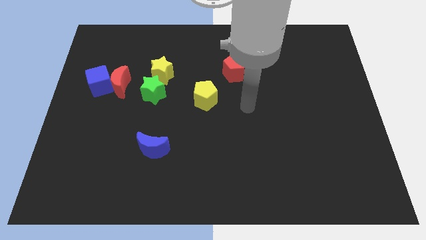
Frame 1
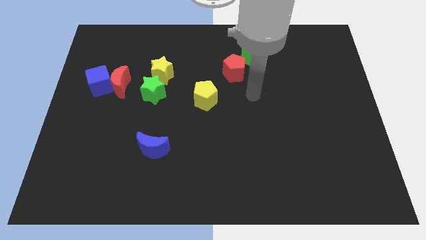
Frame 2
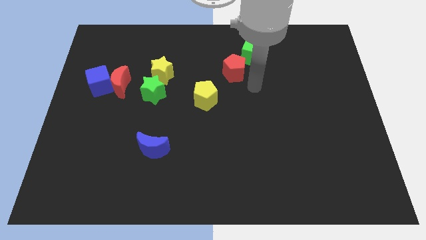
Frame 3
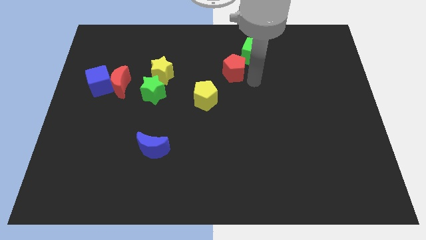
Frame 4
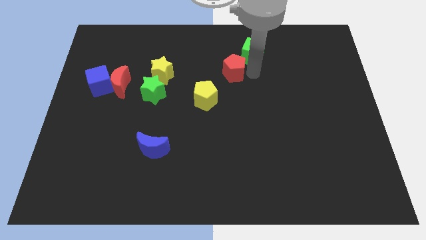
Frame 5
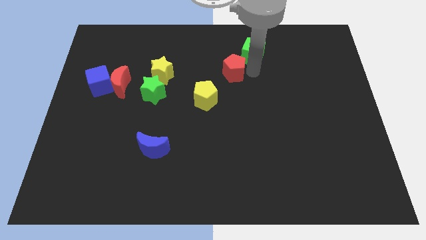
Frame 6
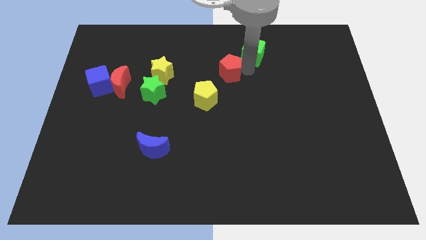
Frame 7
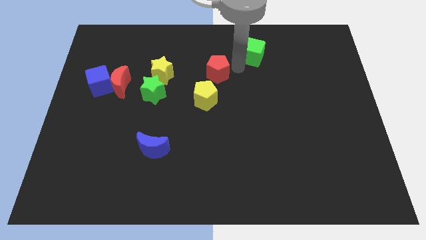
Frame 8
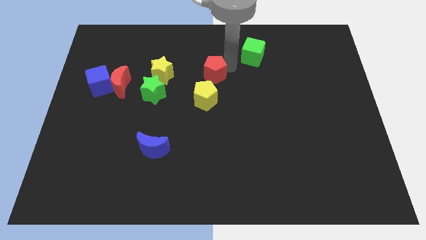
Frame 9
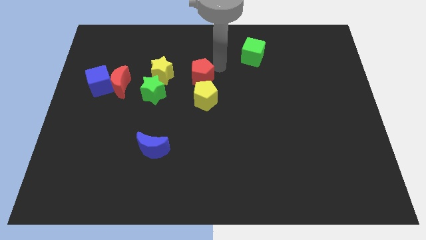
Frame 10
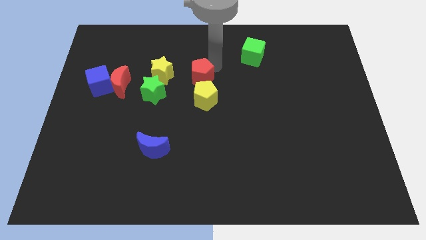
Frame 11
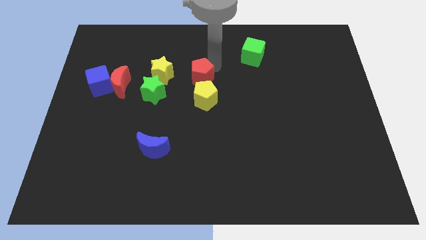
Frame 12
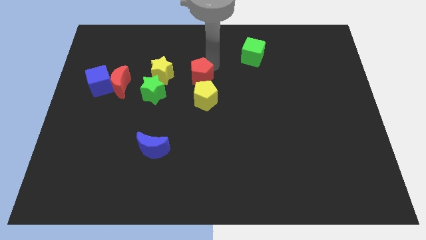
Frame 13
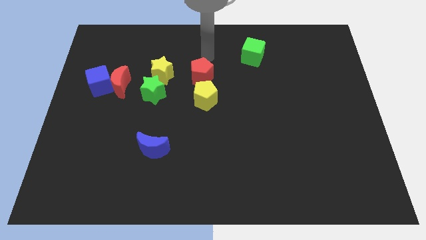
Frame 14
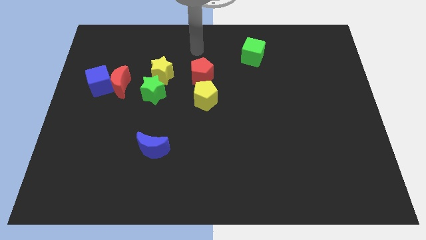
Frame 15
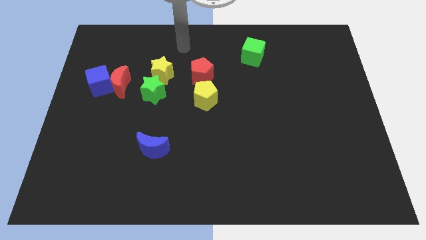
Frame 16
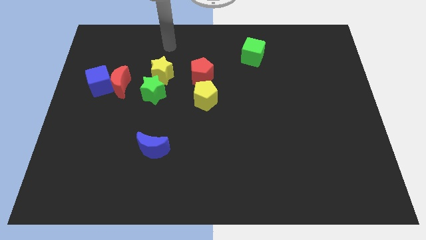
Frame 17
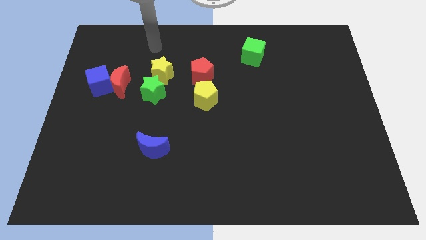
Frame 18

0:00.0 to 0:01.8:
push the red pentagon above the yellow pentagon

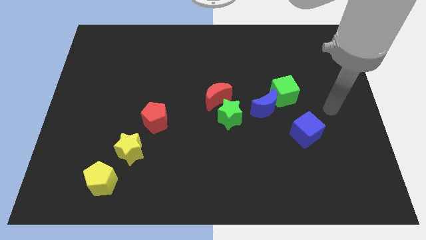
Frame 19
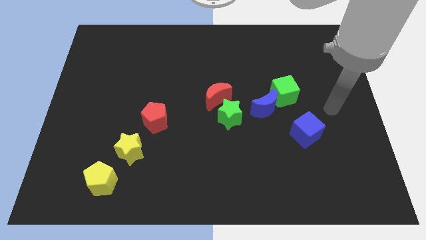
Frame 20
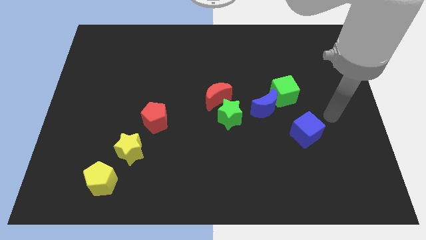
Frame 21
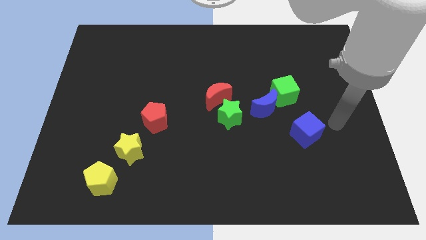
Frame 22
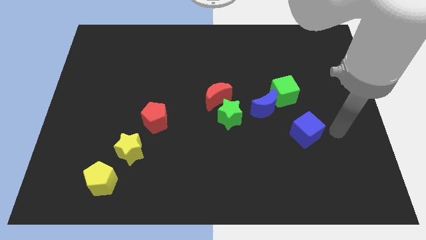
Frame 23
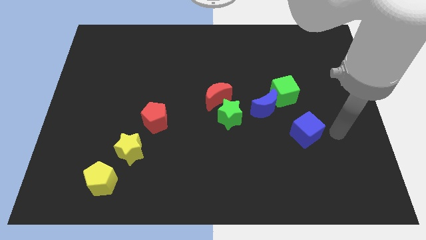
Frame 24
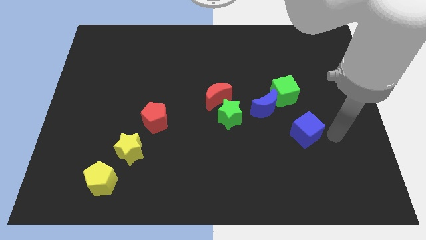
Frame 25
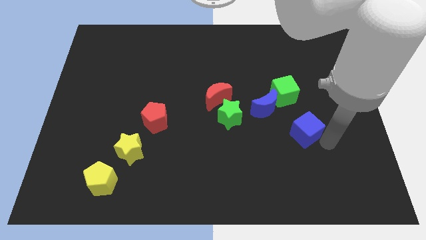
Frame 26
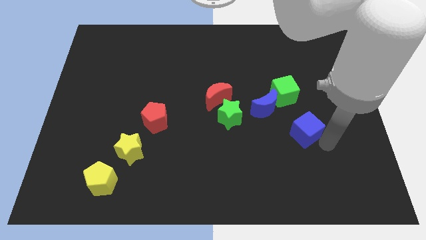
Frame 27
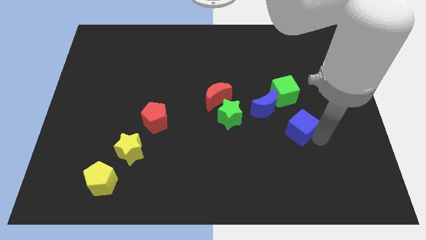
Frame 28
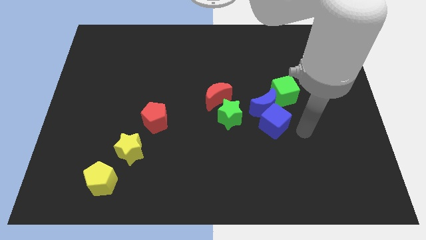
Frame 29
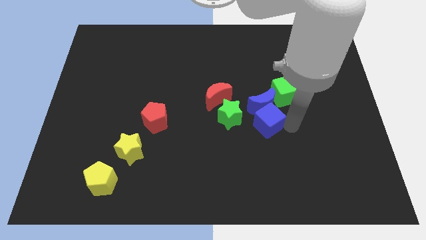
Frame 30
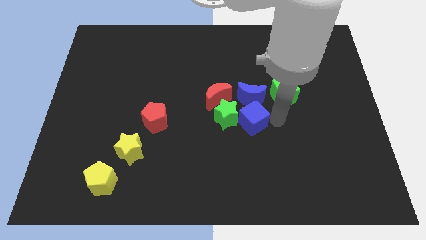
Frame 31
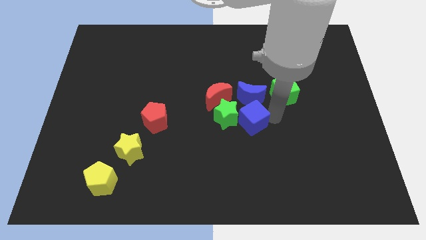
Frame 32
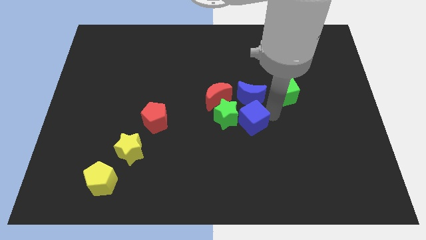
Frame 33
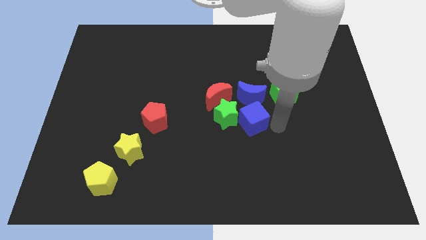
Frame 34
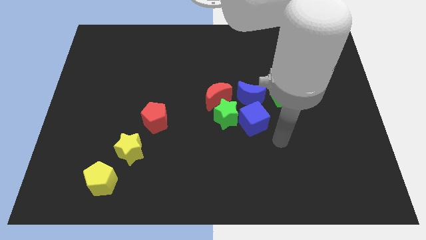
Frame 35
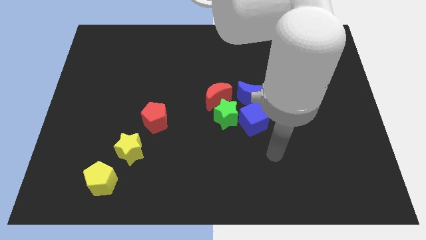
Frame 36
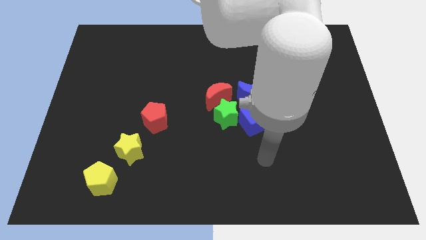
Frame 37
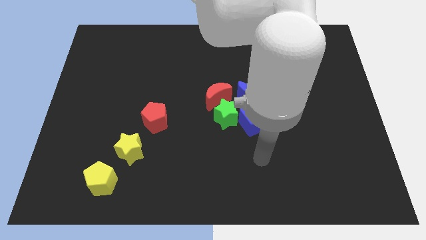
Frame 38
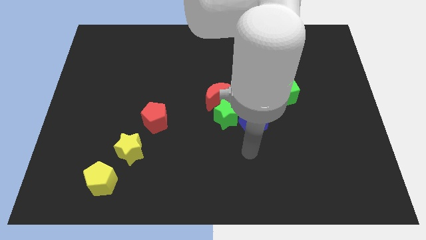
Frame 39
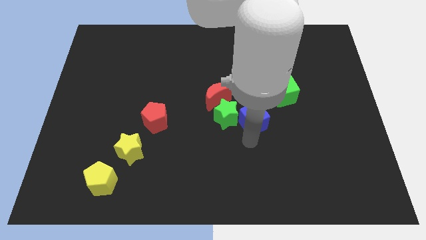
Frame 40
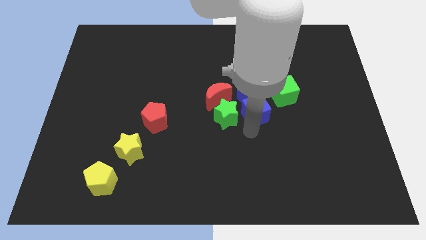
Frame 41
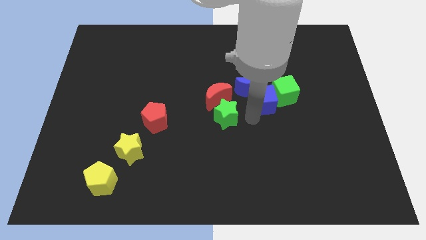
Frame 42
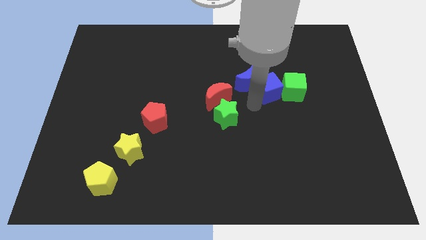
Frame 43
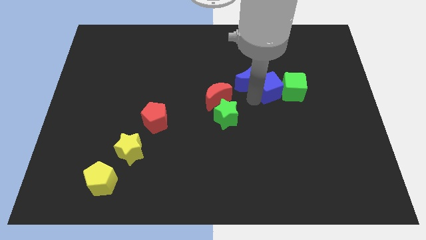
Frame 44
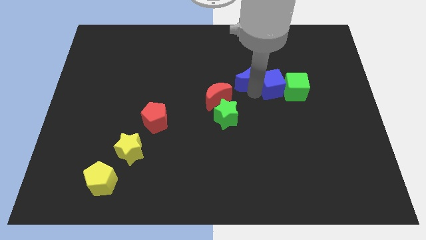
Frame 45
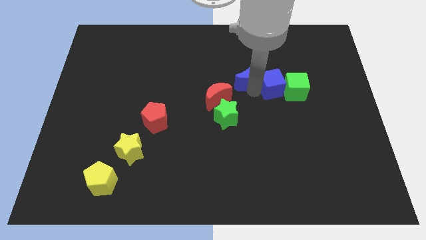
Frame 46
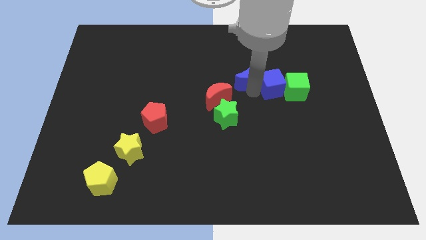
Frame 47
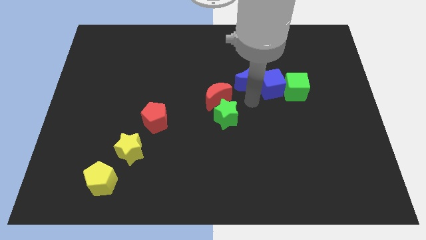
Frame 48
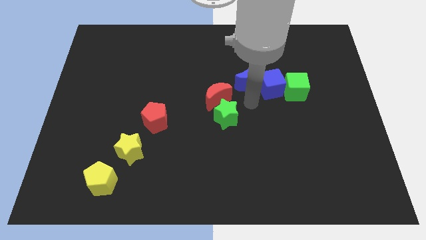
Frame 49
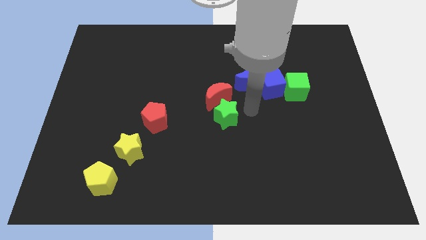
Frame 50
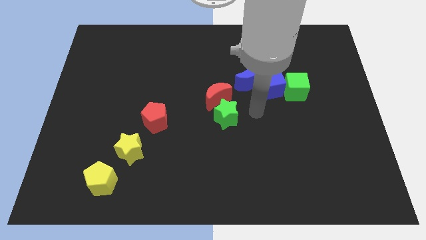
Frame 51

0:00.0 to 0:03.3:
push the blue cube into the blue moon

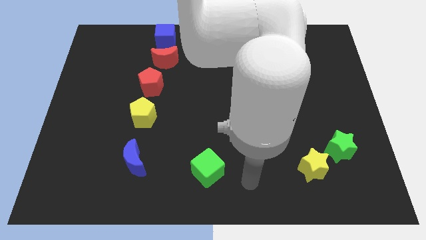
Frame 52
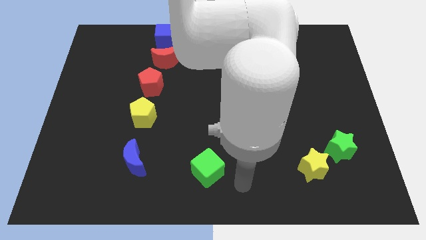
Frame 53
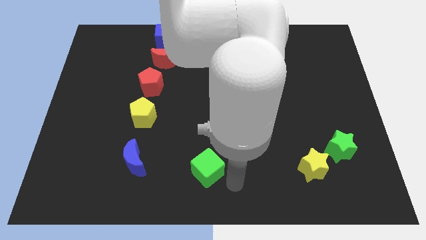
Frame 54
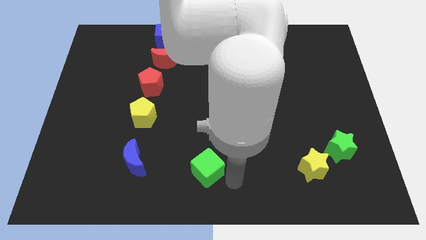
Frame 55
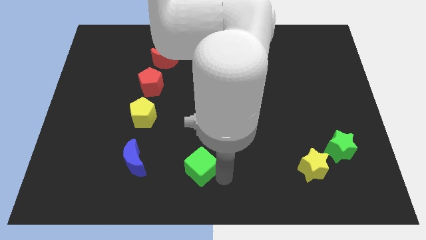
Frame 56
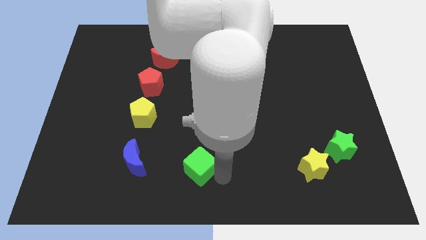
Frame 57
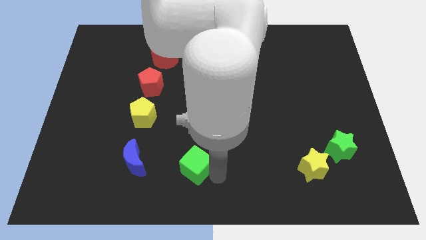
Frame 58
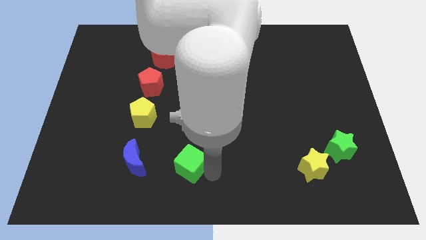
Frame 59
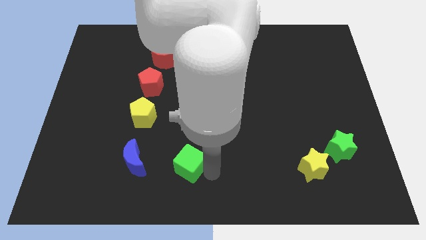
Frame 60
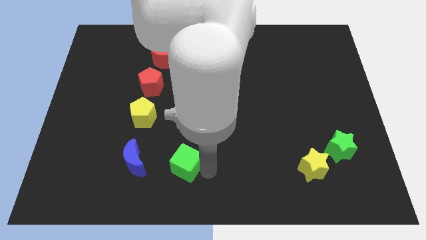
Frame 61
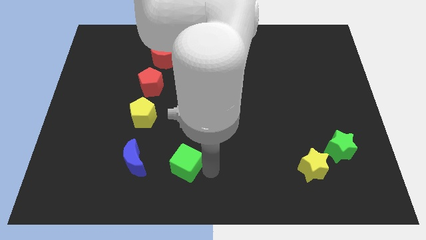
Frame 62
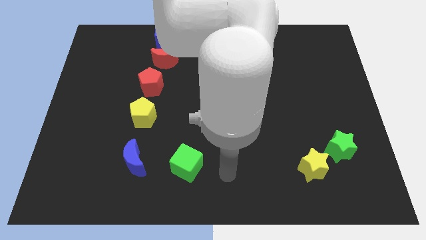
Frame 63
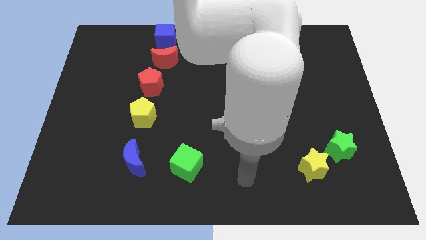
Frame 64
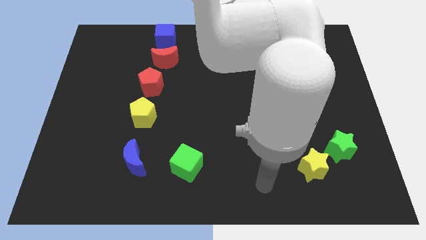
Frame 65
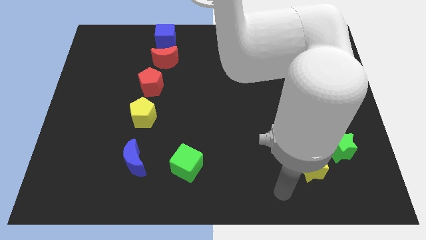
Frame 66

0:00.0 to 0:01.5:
push the green cube to the left side

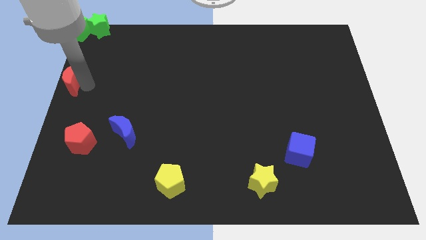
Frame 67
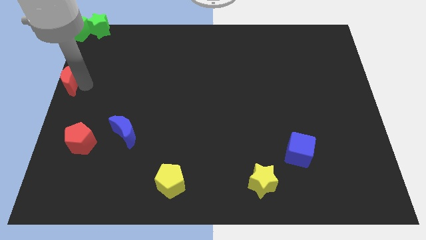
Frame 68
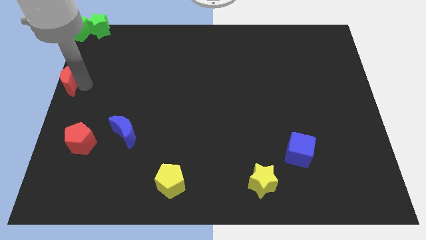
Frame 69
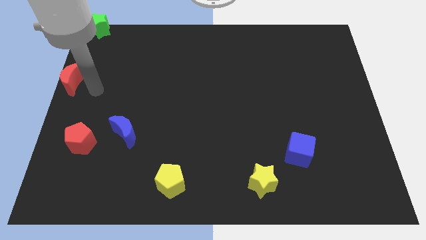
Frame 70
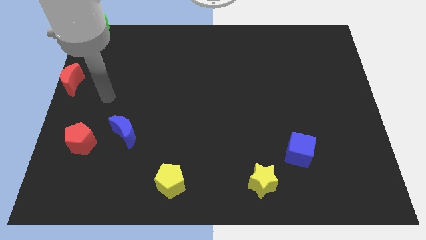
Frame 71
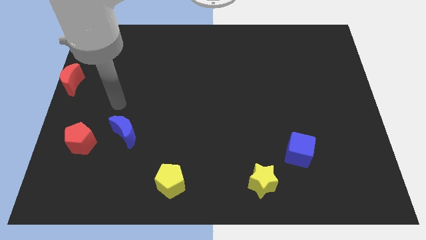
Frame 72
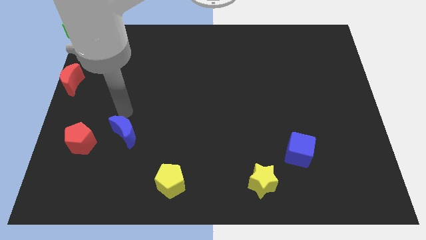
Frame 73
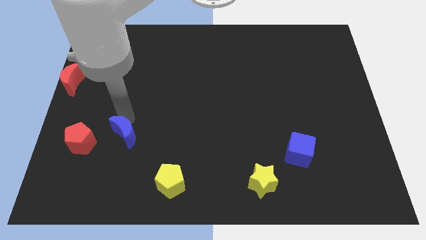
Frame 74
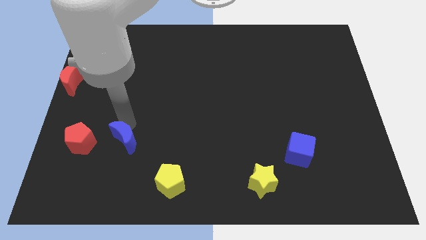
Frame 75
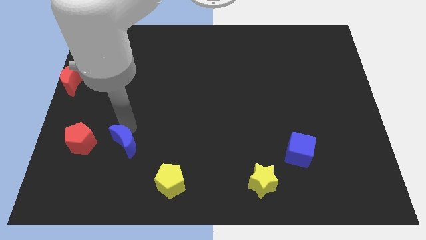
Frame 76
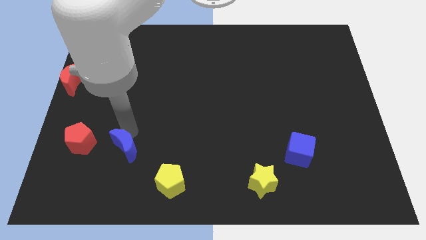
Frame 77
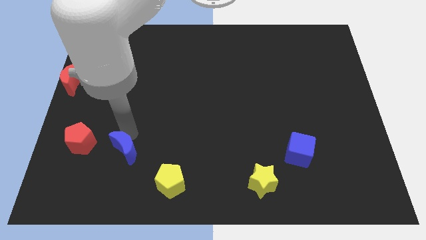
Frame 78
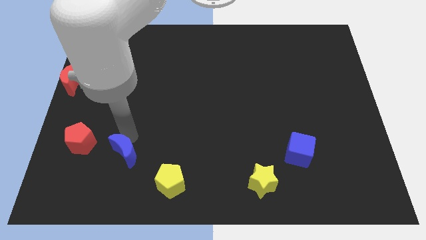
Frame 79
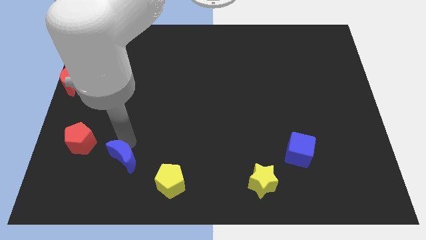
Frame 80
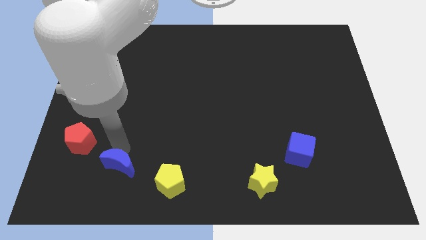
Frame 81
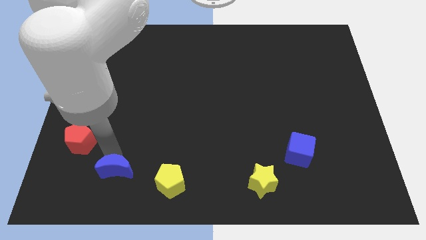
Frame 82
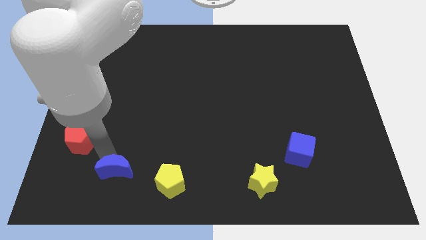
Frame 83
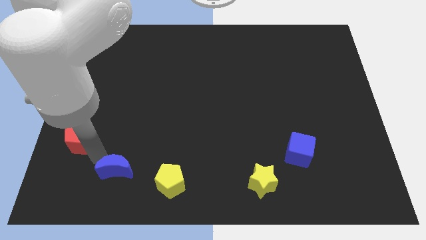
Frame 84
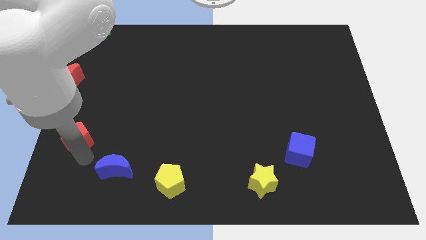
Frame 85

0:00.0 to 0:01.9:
push the blue moon to the left of yellow pentagon

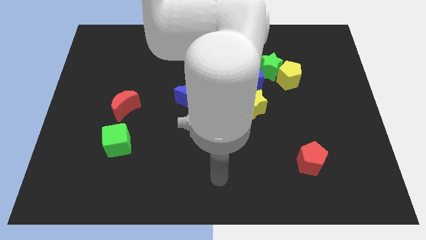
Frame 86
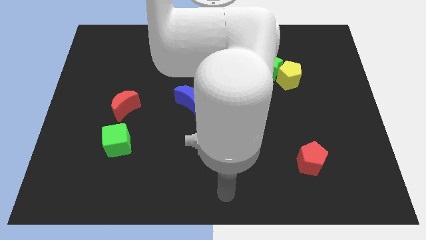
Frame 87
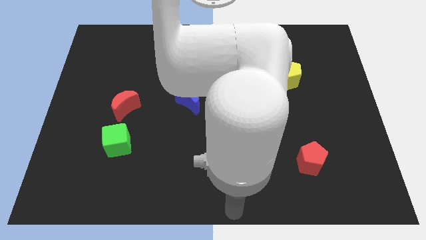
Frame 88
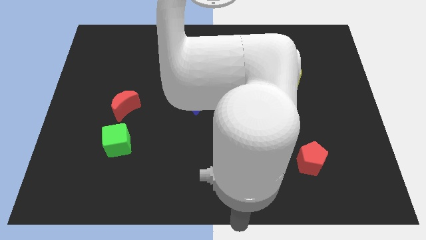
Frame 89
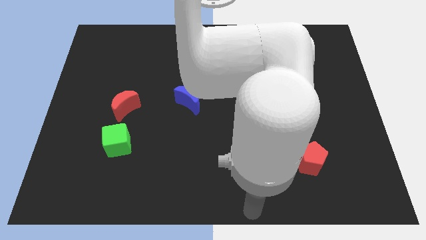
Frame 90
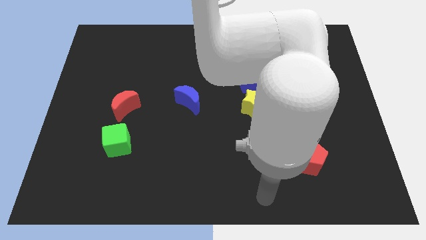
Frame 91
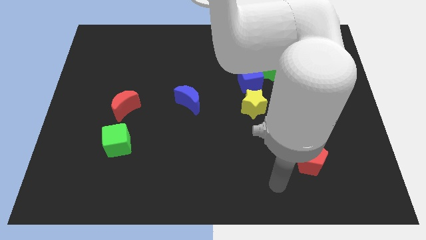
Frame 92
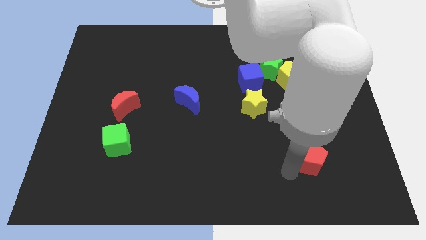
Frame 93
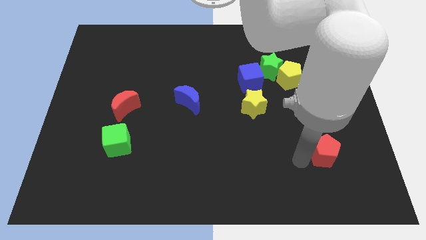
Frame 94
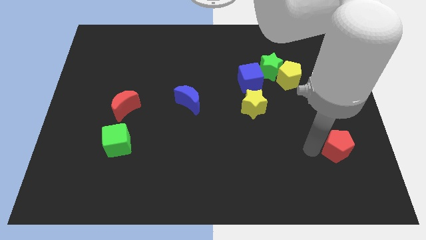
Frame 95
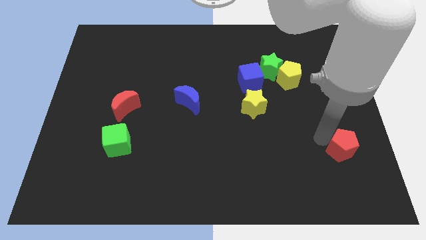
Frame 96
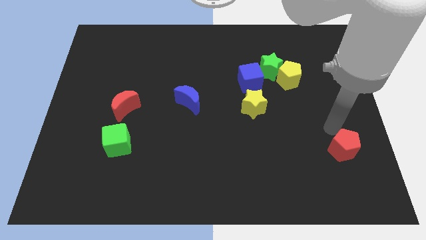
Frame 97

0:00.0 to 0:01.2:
slide the red pentagon towards the center right of the board
